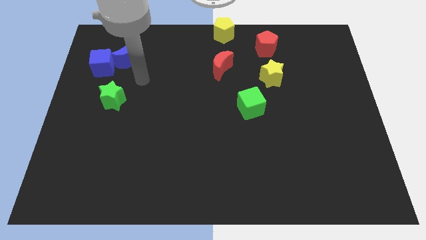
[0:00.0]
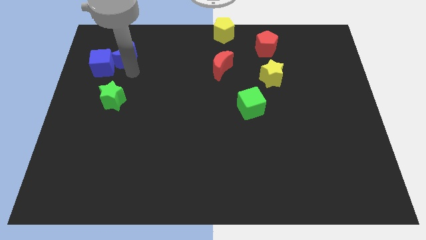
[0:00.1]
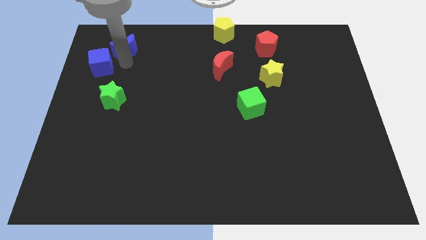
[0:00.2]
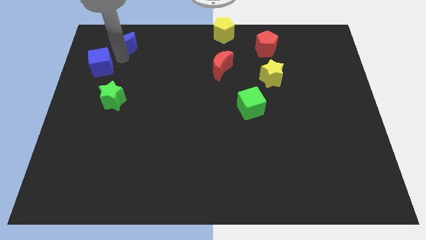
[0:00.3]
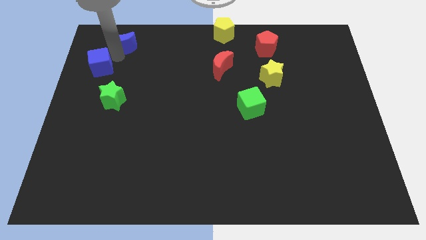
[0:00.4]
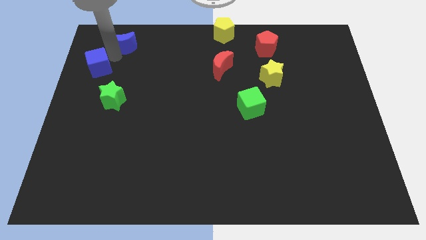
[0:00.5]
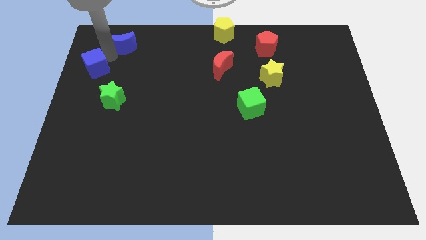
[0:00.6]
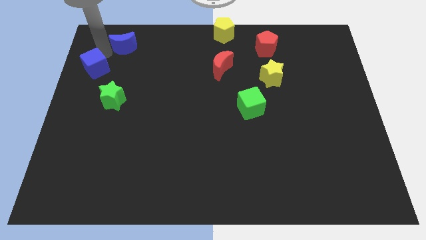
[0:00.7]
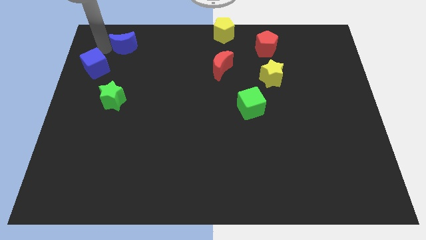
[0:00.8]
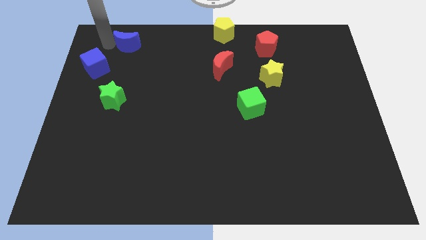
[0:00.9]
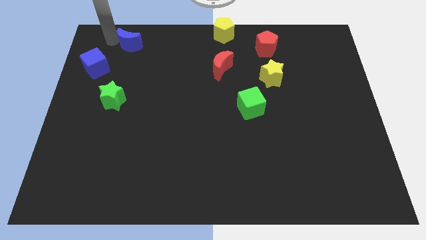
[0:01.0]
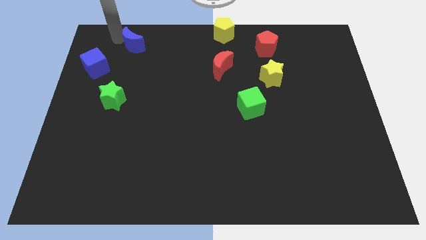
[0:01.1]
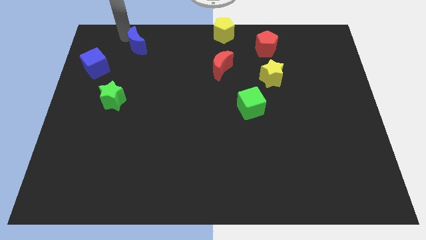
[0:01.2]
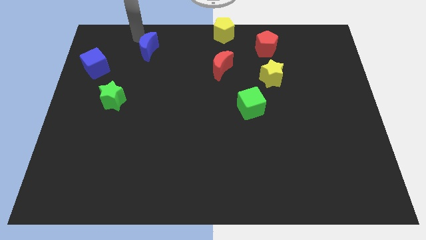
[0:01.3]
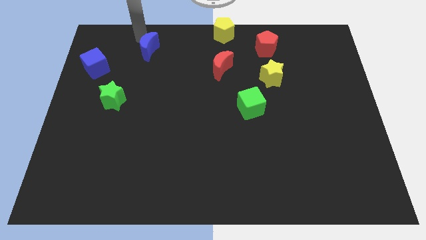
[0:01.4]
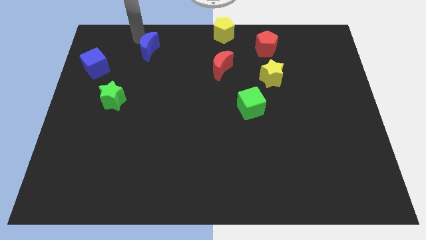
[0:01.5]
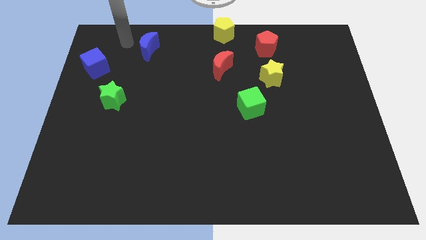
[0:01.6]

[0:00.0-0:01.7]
separate the blue crescent from the blue cube

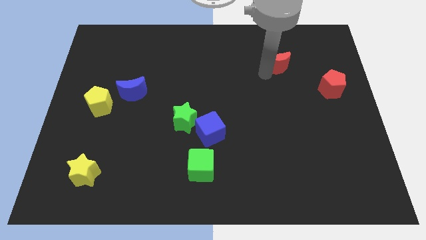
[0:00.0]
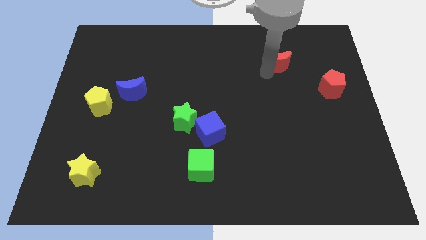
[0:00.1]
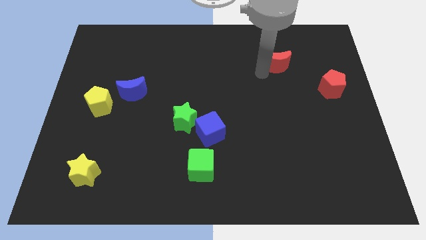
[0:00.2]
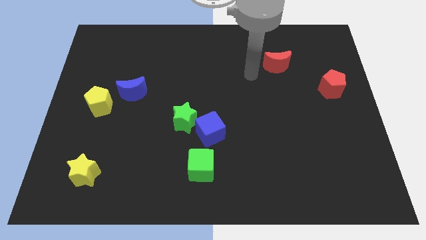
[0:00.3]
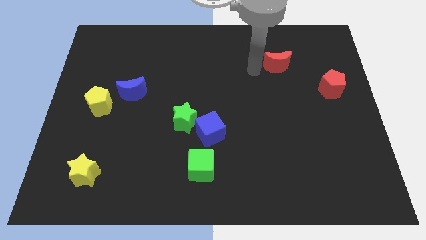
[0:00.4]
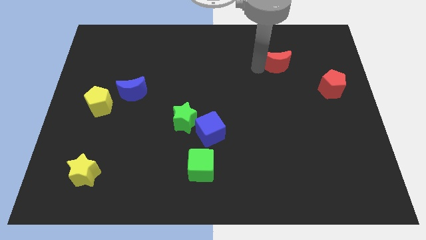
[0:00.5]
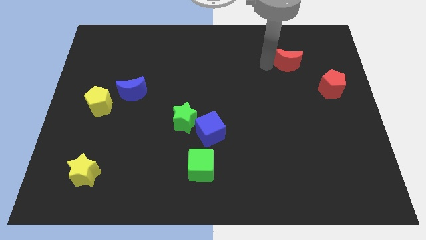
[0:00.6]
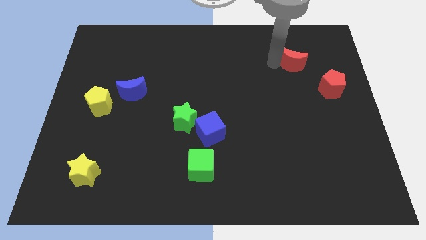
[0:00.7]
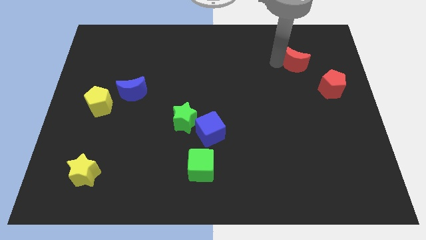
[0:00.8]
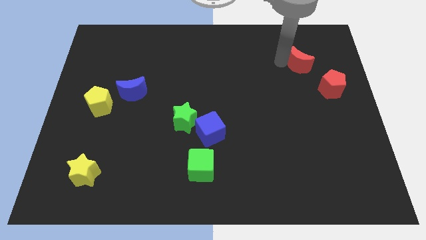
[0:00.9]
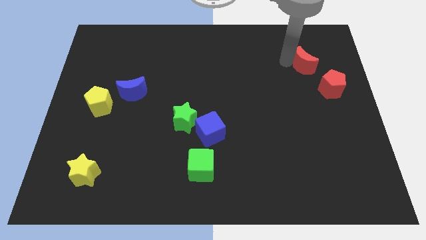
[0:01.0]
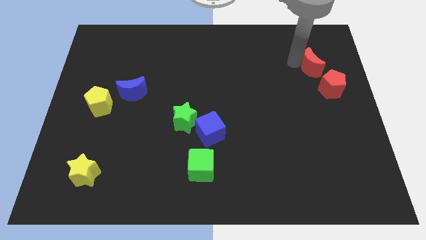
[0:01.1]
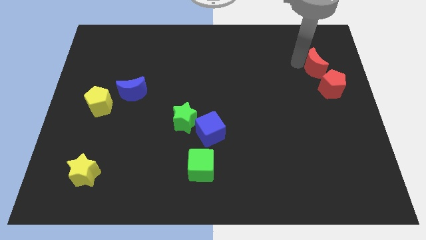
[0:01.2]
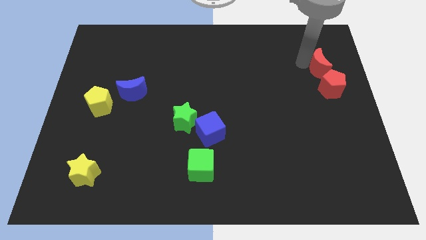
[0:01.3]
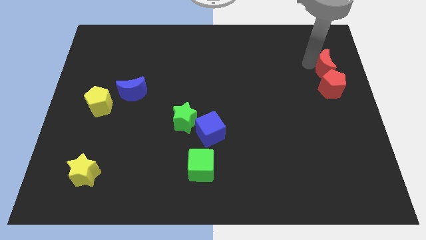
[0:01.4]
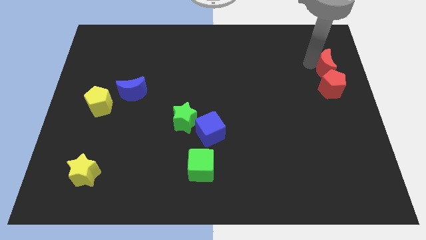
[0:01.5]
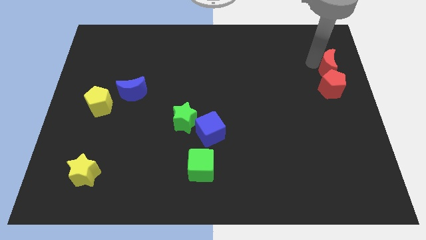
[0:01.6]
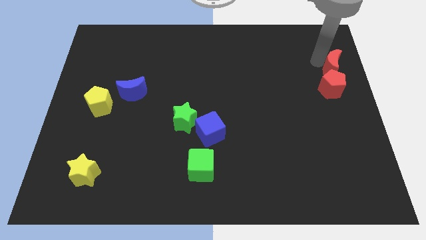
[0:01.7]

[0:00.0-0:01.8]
place red moon vertically above the red pentagon

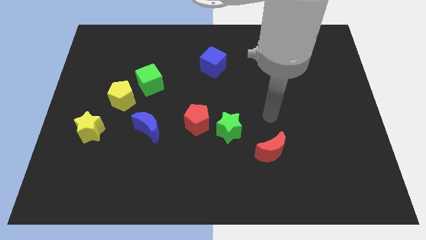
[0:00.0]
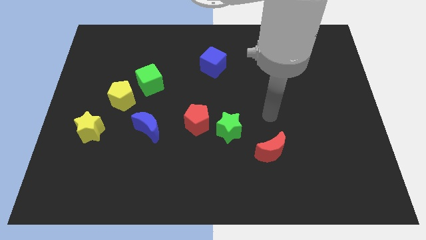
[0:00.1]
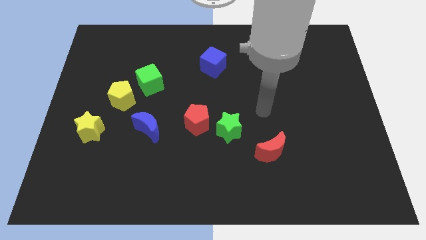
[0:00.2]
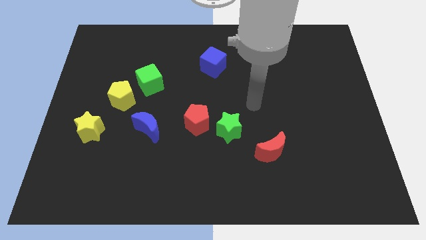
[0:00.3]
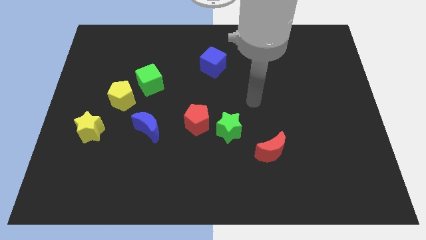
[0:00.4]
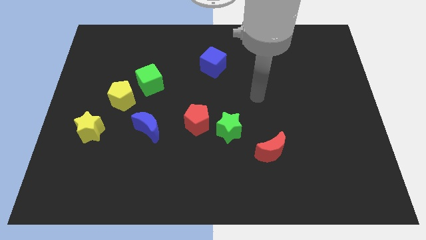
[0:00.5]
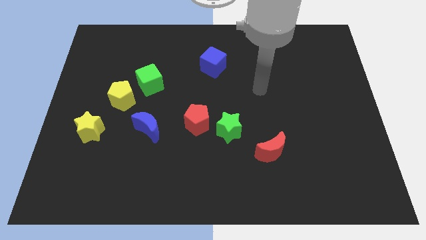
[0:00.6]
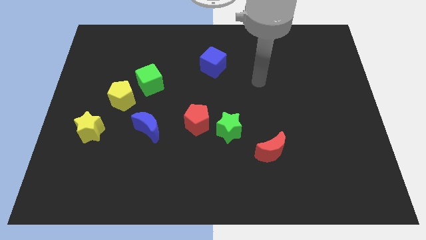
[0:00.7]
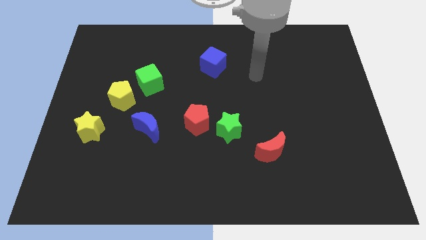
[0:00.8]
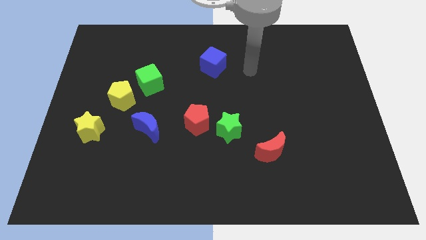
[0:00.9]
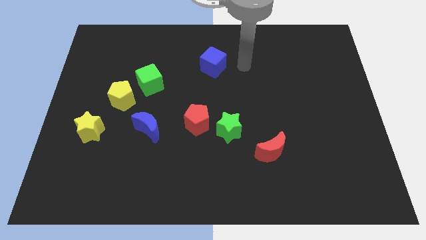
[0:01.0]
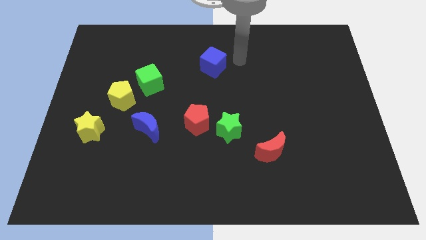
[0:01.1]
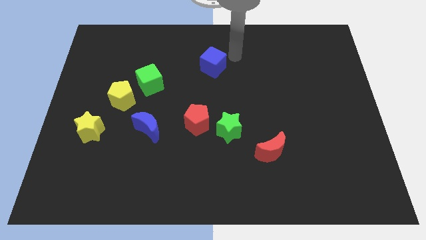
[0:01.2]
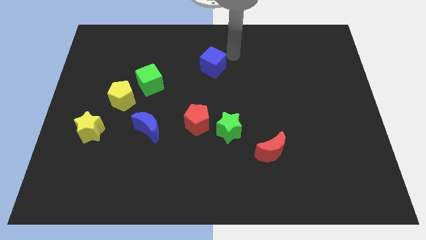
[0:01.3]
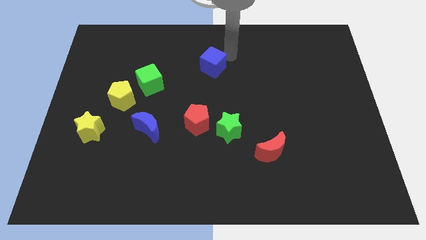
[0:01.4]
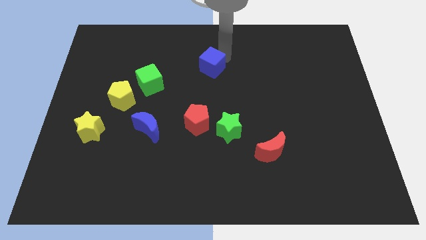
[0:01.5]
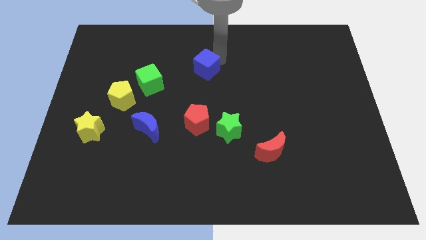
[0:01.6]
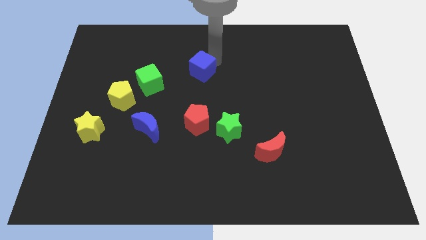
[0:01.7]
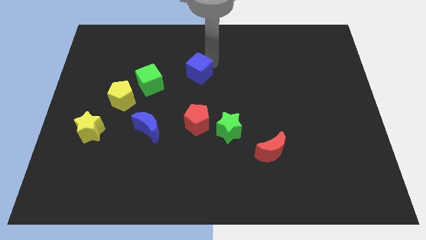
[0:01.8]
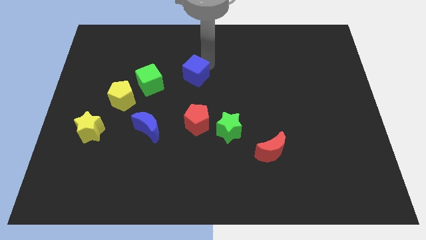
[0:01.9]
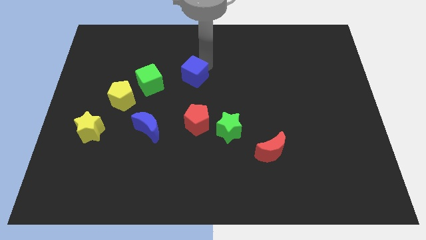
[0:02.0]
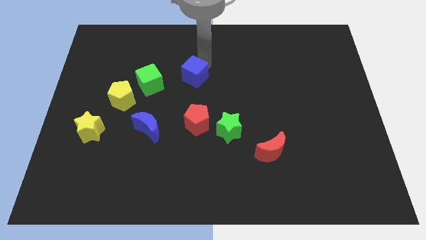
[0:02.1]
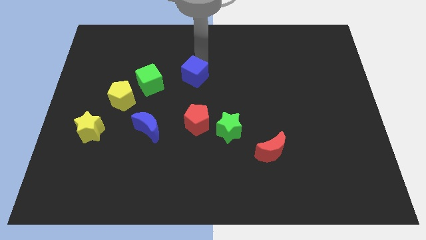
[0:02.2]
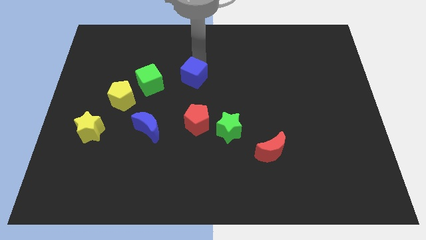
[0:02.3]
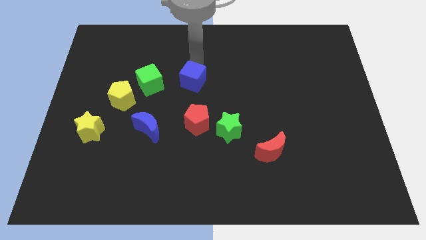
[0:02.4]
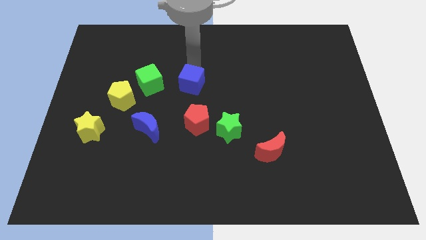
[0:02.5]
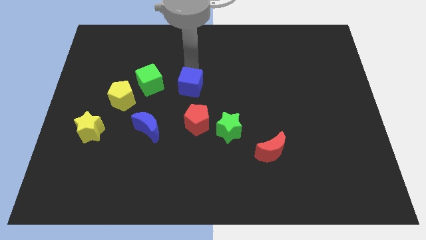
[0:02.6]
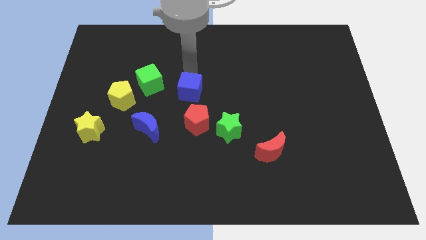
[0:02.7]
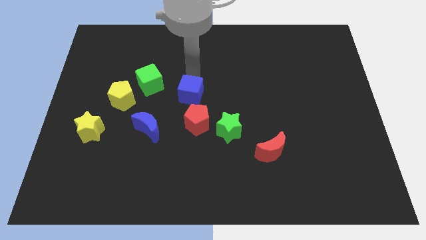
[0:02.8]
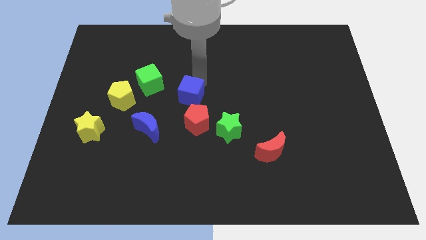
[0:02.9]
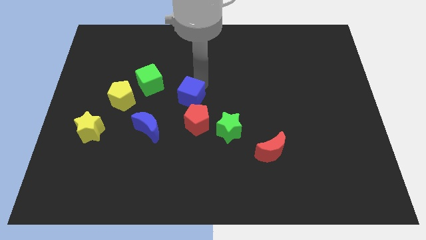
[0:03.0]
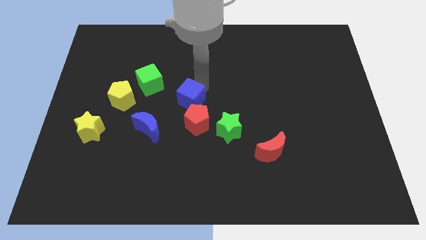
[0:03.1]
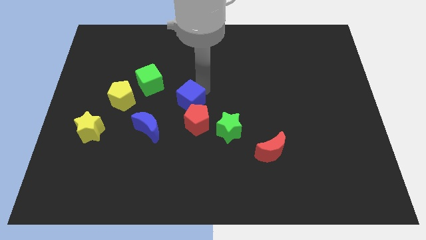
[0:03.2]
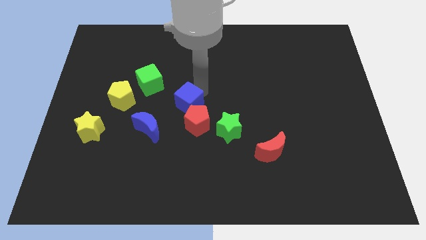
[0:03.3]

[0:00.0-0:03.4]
move the blue cube into the red pentagon

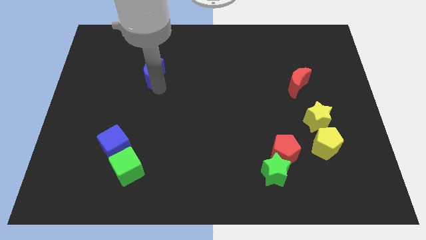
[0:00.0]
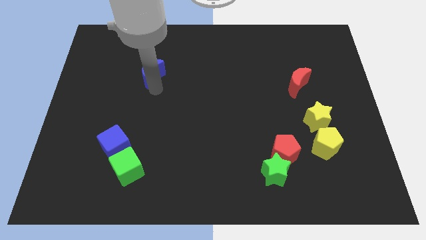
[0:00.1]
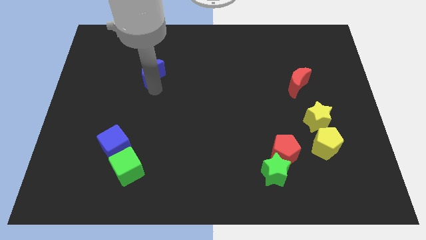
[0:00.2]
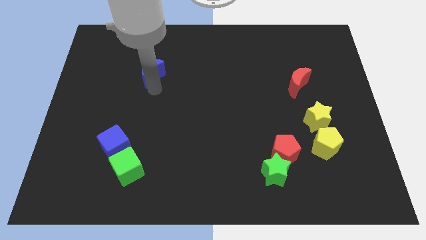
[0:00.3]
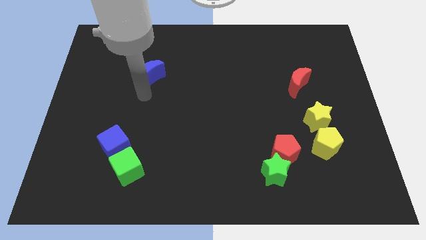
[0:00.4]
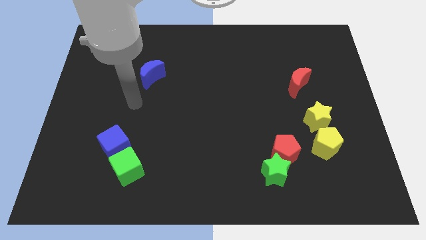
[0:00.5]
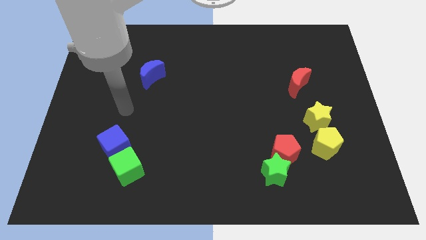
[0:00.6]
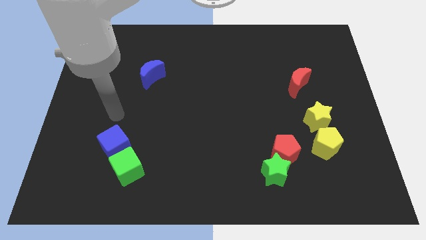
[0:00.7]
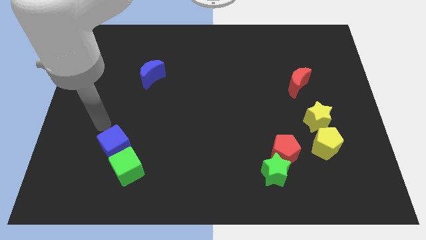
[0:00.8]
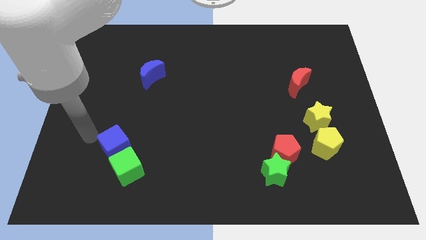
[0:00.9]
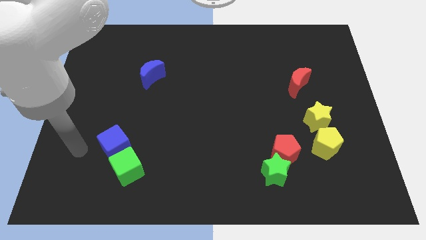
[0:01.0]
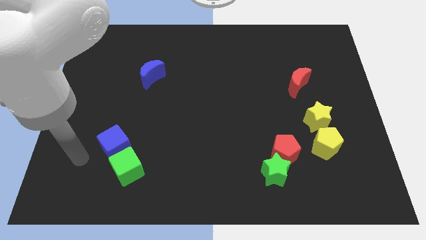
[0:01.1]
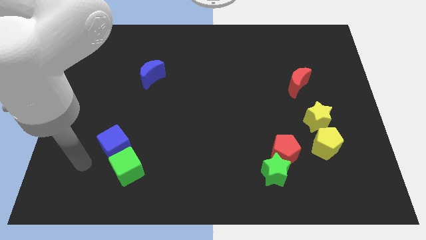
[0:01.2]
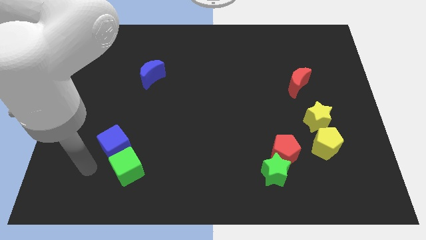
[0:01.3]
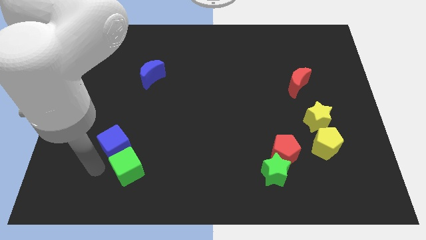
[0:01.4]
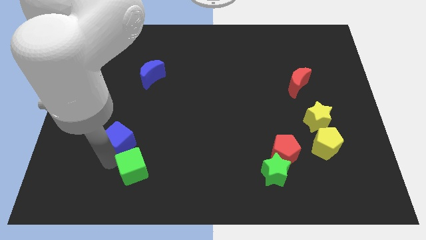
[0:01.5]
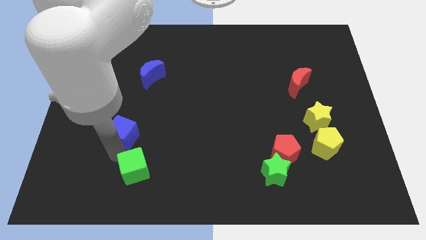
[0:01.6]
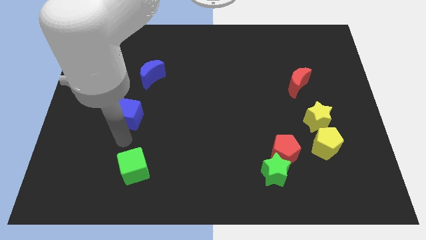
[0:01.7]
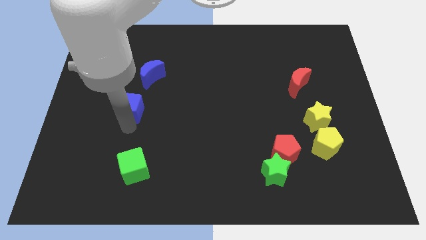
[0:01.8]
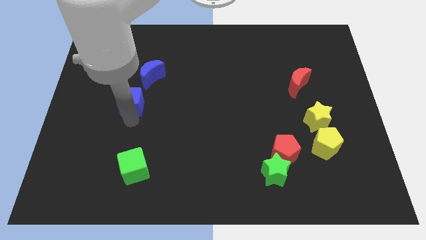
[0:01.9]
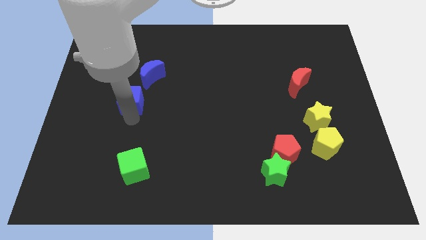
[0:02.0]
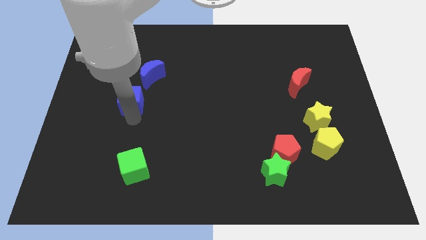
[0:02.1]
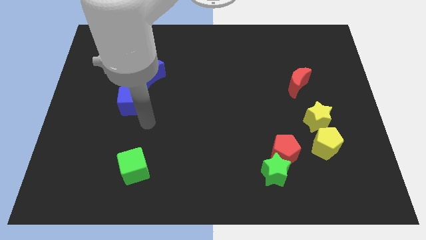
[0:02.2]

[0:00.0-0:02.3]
move the arm towards the blue cube
